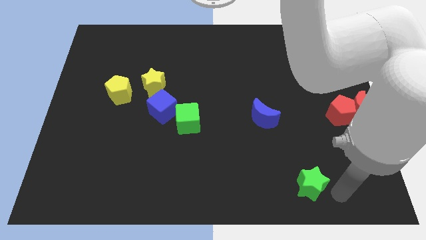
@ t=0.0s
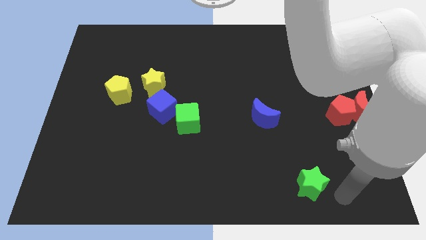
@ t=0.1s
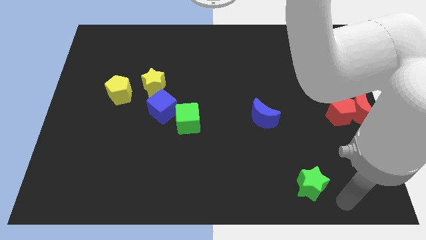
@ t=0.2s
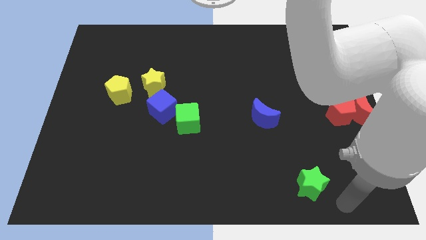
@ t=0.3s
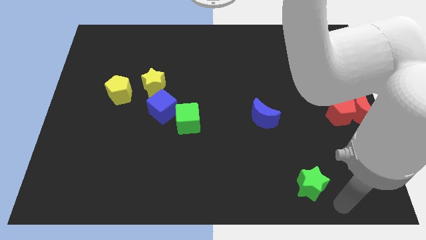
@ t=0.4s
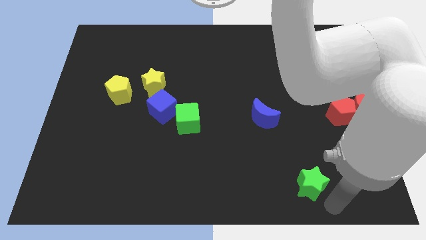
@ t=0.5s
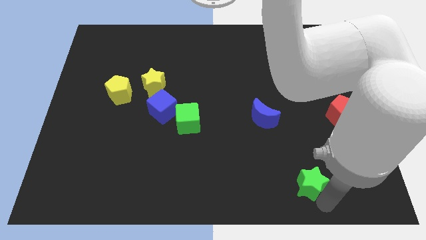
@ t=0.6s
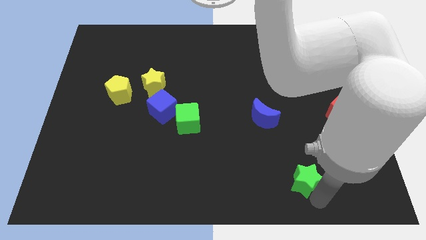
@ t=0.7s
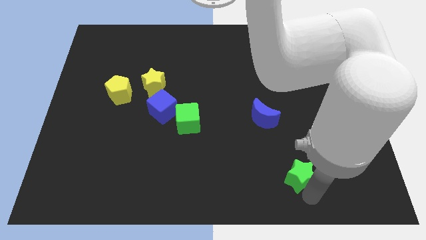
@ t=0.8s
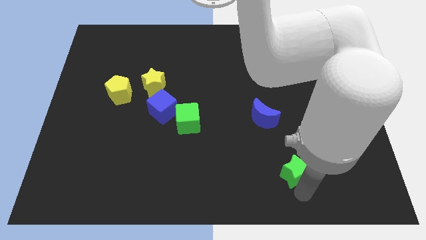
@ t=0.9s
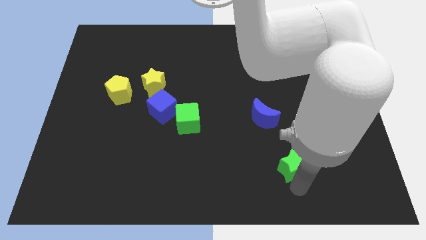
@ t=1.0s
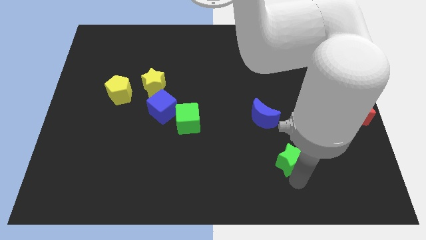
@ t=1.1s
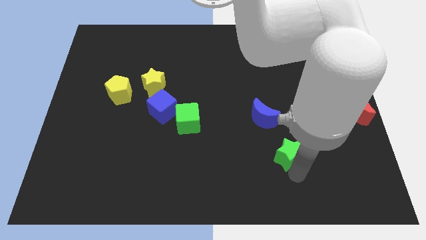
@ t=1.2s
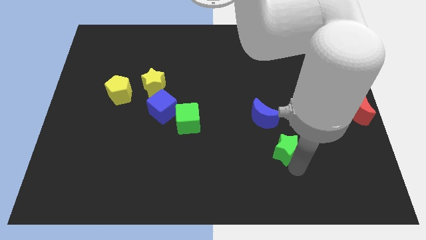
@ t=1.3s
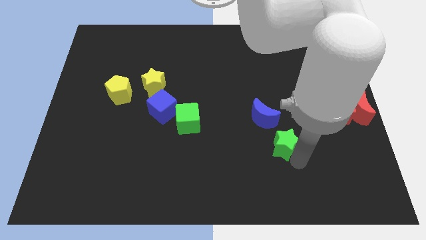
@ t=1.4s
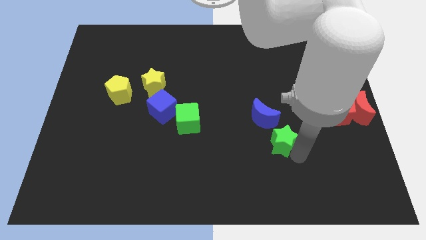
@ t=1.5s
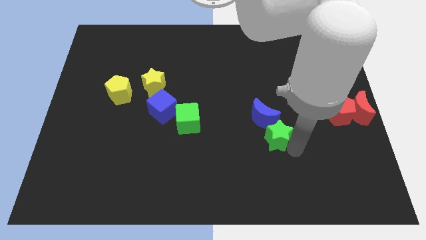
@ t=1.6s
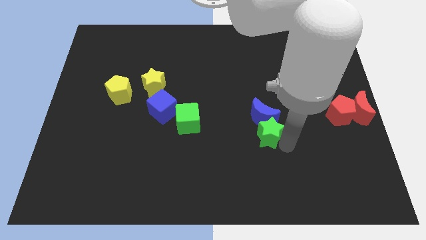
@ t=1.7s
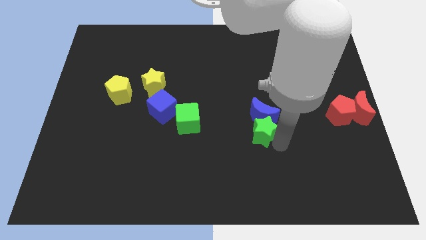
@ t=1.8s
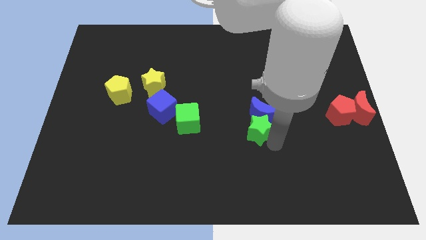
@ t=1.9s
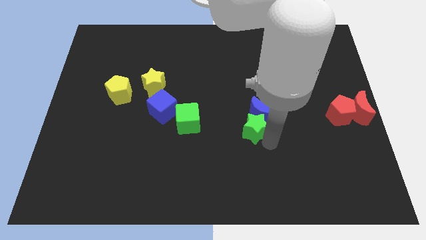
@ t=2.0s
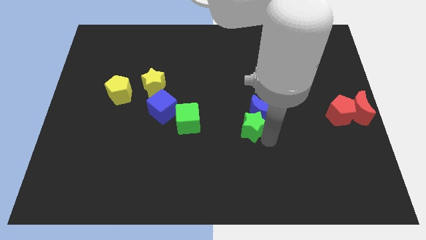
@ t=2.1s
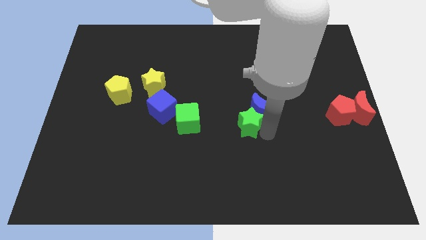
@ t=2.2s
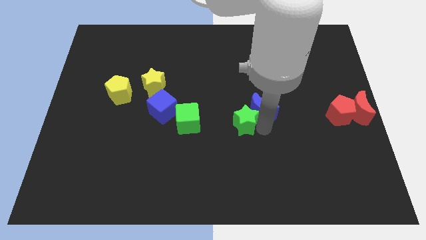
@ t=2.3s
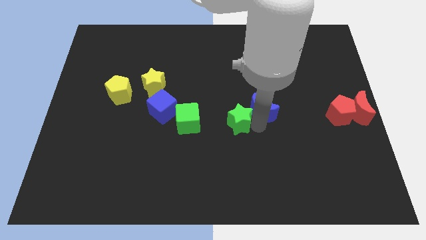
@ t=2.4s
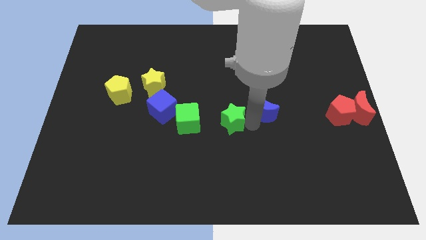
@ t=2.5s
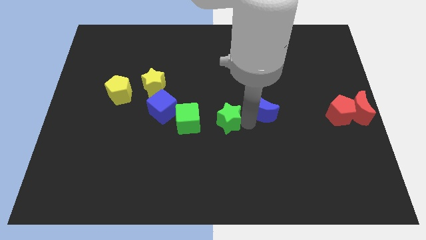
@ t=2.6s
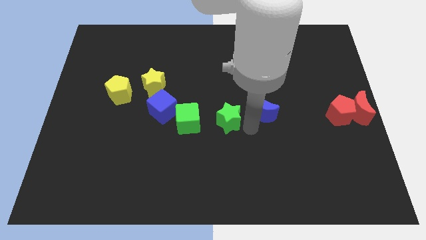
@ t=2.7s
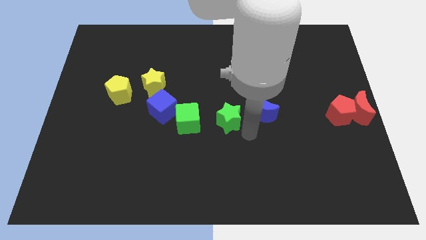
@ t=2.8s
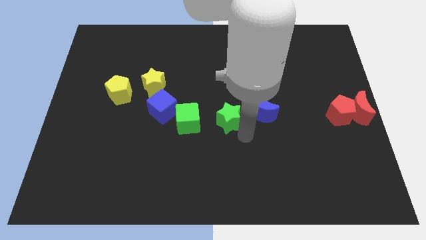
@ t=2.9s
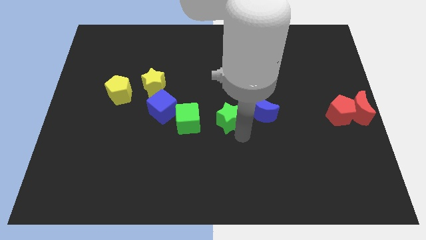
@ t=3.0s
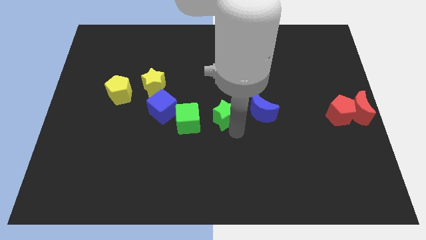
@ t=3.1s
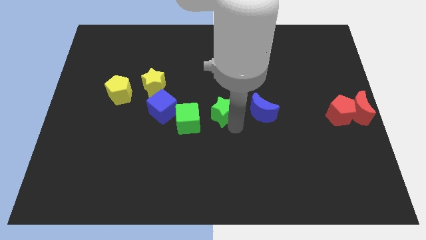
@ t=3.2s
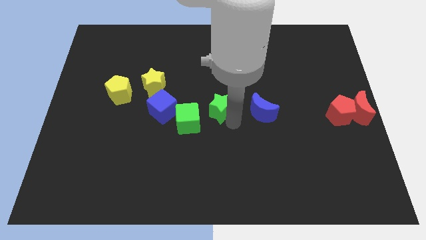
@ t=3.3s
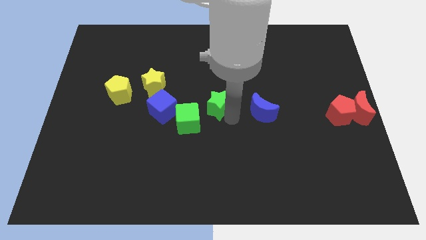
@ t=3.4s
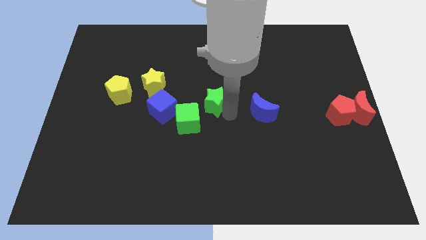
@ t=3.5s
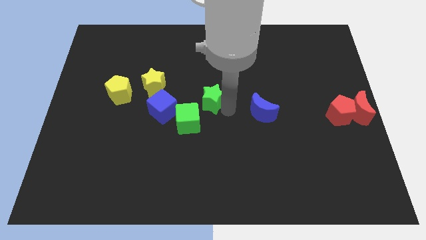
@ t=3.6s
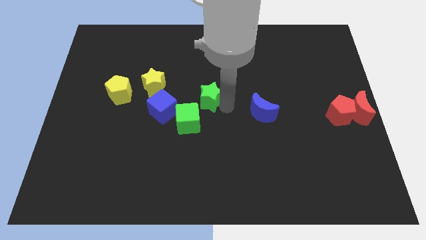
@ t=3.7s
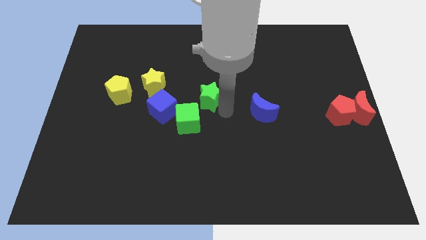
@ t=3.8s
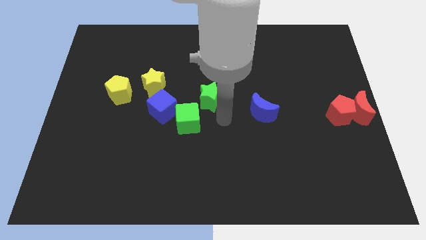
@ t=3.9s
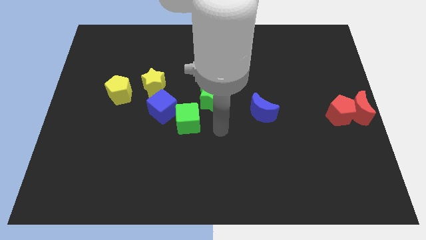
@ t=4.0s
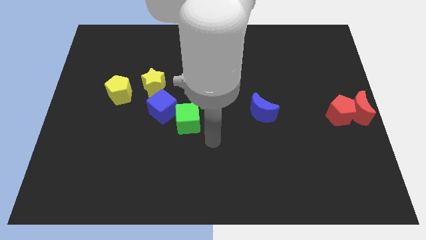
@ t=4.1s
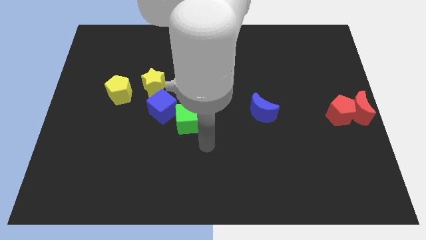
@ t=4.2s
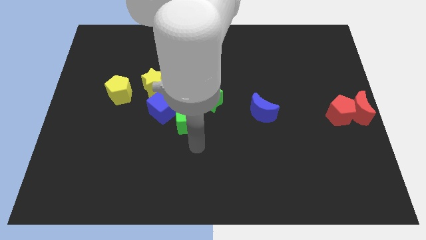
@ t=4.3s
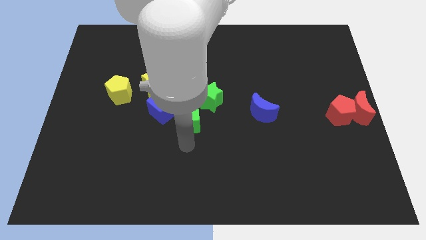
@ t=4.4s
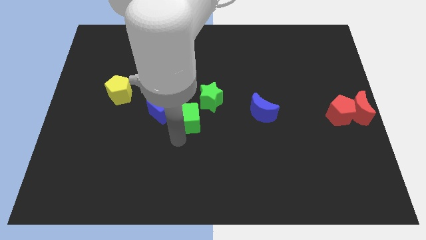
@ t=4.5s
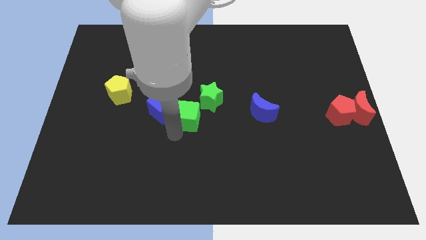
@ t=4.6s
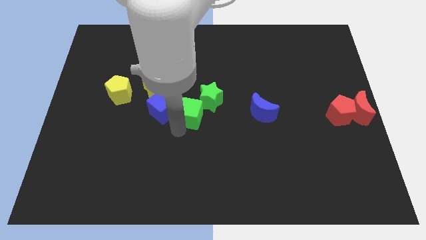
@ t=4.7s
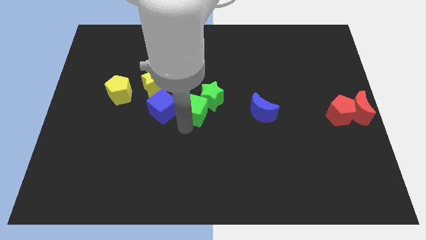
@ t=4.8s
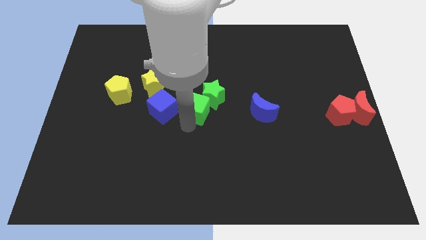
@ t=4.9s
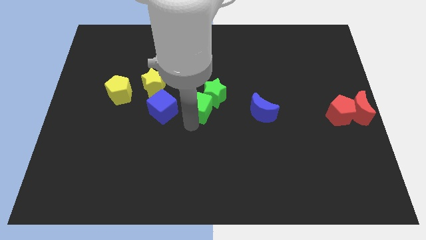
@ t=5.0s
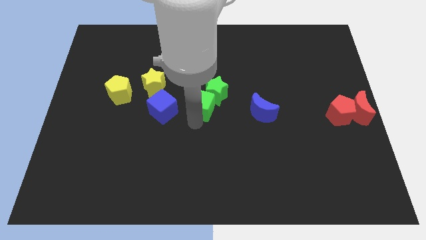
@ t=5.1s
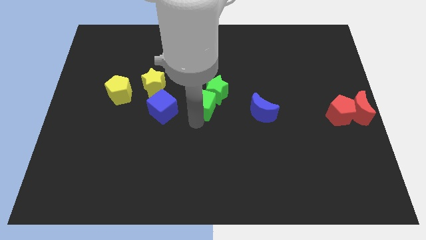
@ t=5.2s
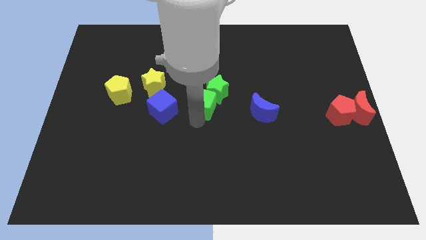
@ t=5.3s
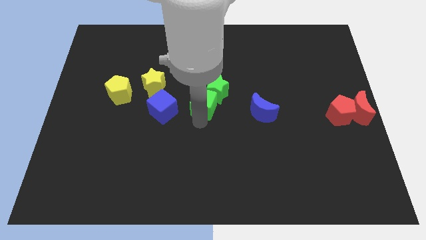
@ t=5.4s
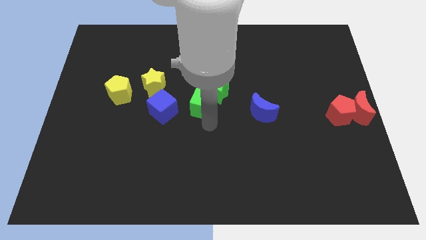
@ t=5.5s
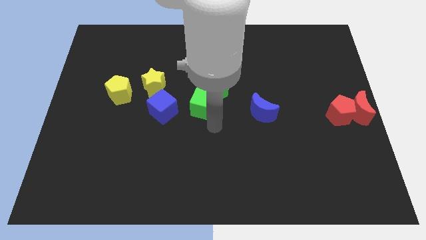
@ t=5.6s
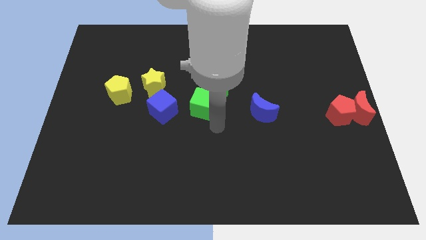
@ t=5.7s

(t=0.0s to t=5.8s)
place the green star near the green cube

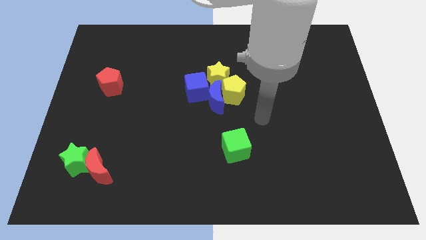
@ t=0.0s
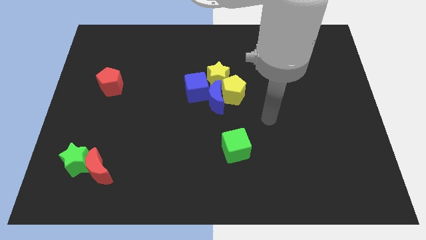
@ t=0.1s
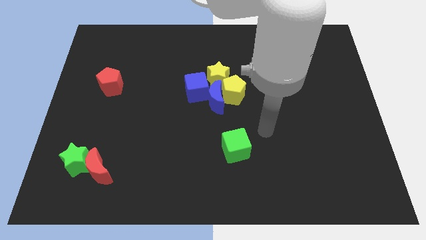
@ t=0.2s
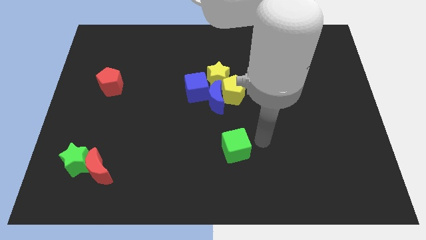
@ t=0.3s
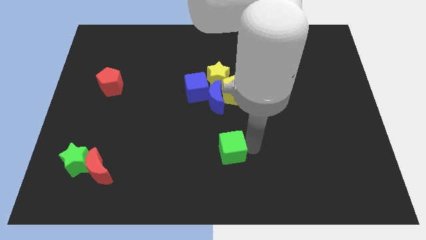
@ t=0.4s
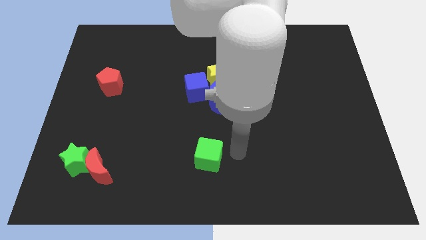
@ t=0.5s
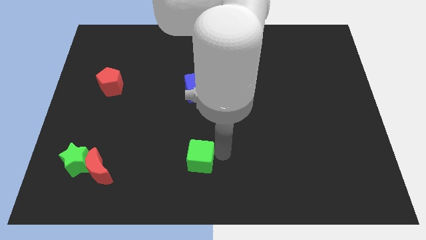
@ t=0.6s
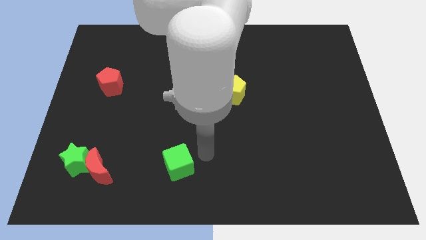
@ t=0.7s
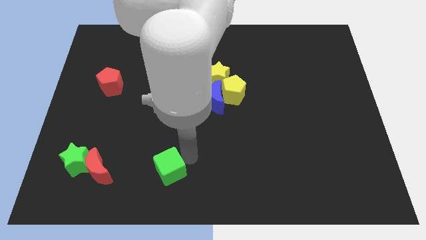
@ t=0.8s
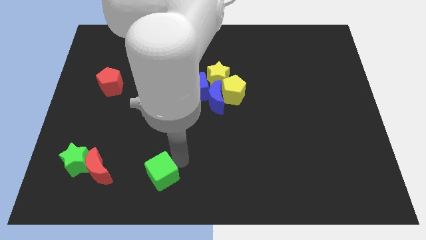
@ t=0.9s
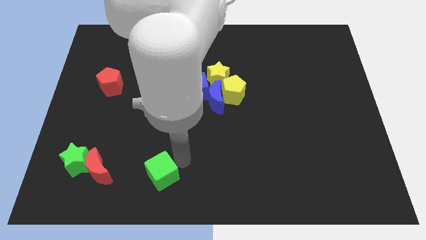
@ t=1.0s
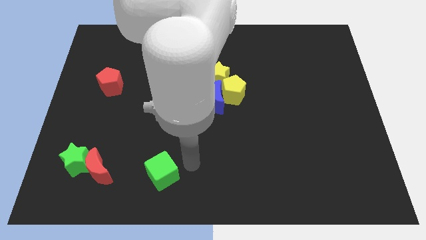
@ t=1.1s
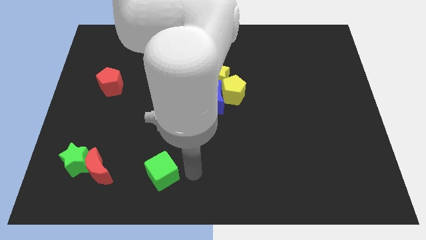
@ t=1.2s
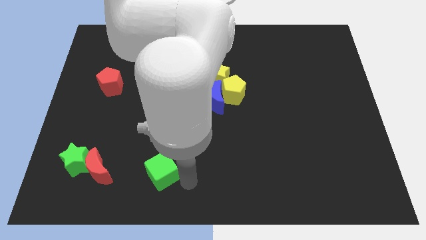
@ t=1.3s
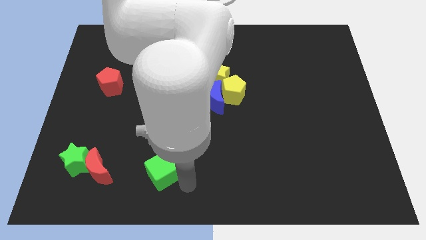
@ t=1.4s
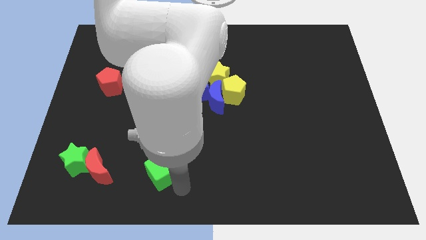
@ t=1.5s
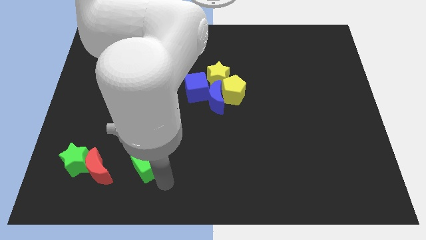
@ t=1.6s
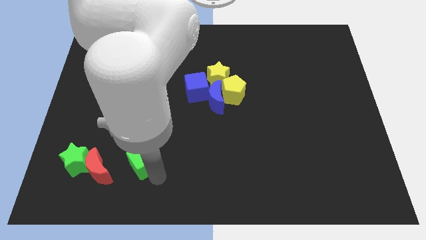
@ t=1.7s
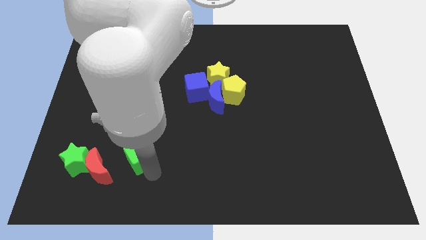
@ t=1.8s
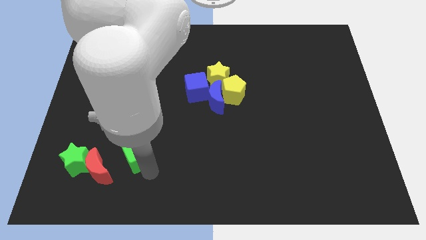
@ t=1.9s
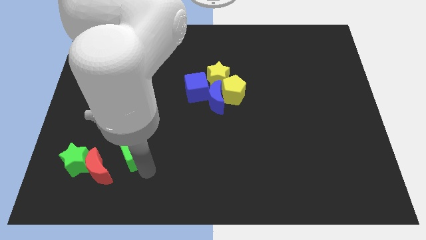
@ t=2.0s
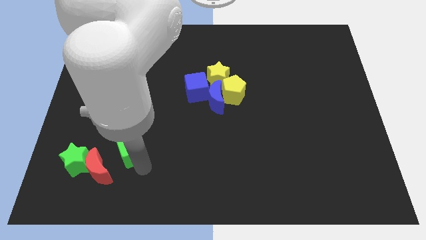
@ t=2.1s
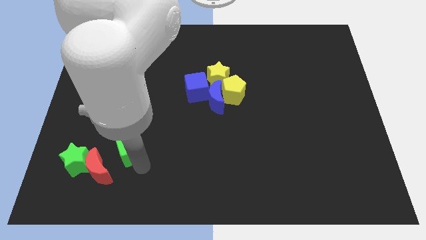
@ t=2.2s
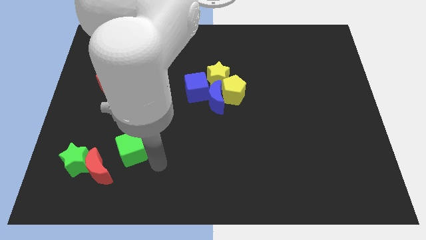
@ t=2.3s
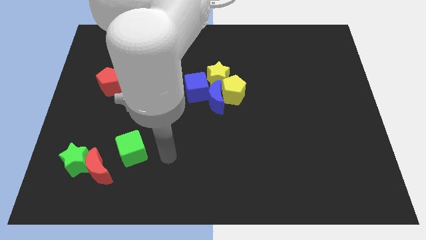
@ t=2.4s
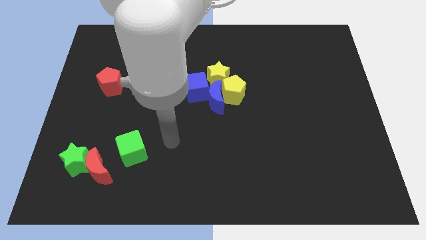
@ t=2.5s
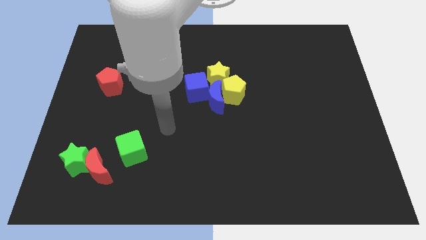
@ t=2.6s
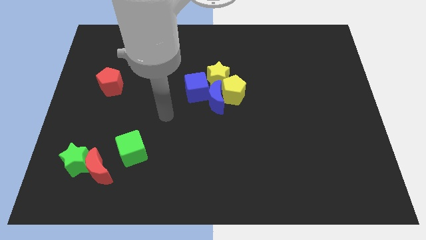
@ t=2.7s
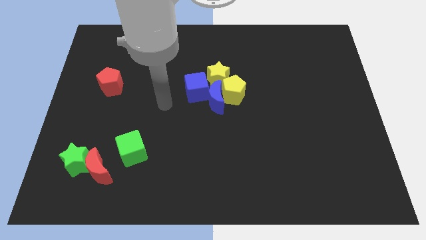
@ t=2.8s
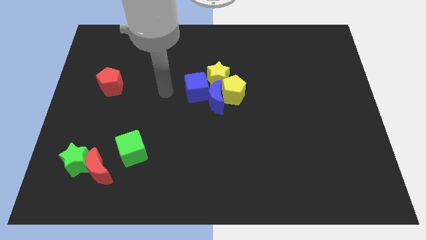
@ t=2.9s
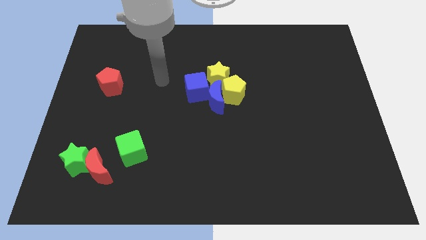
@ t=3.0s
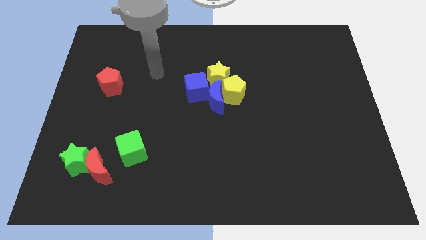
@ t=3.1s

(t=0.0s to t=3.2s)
move the green cube to the right of the green star
